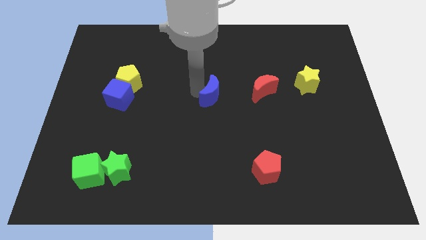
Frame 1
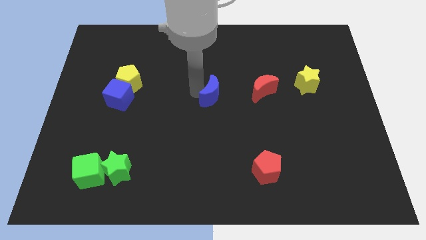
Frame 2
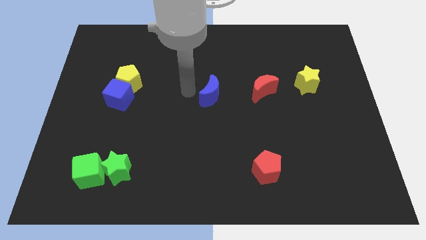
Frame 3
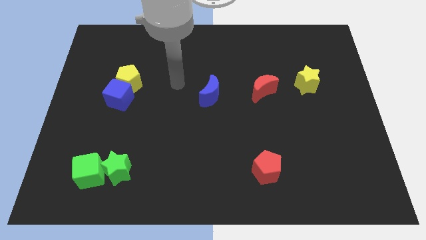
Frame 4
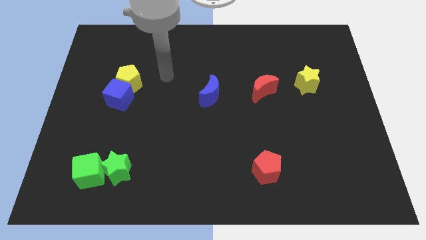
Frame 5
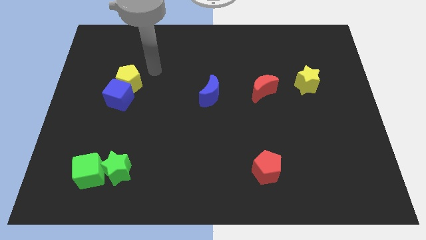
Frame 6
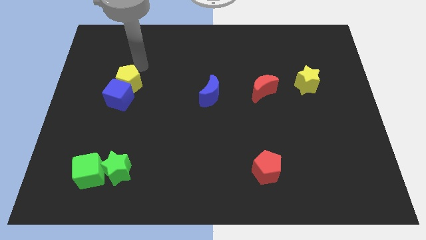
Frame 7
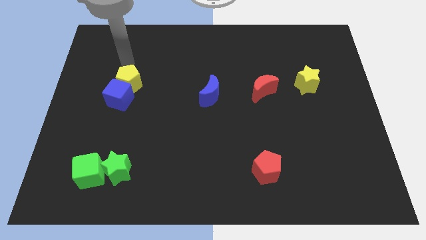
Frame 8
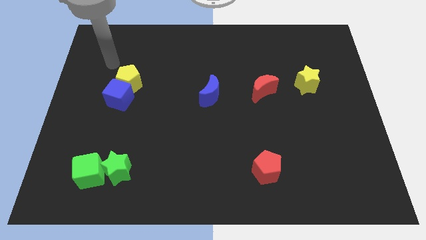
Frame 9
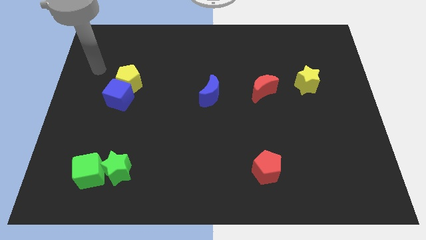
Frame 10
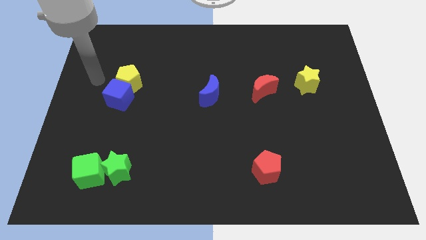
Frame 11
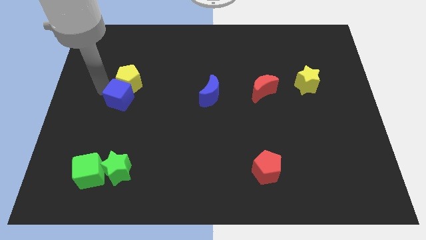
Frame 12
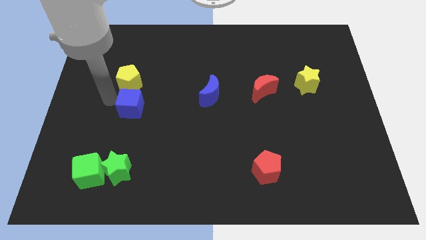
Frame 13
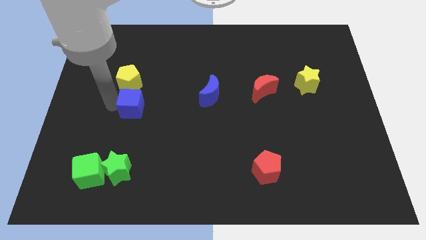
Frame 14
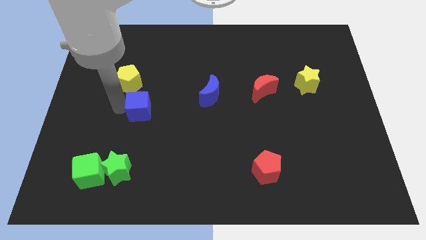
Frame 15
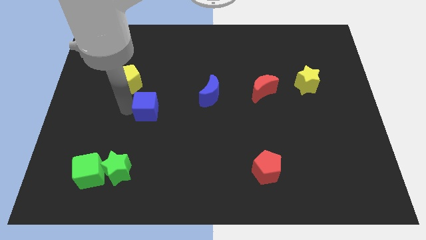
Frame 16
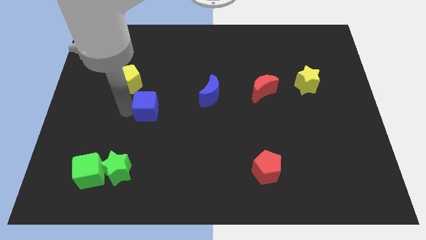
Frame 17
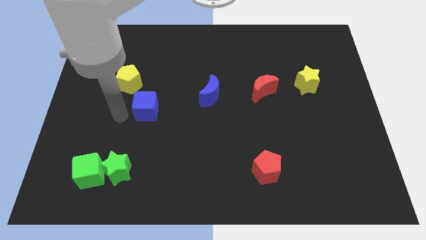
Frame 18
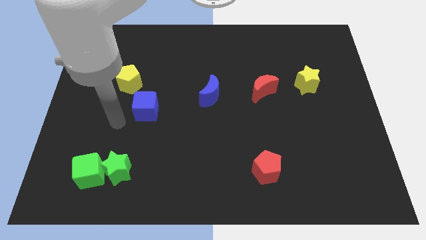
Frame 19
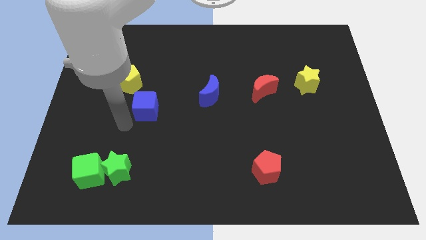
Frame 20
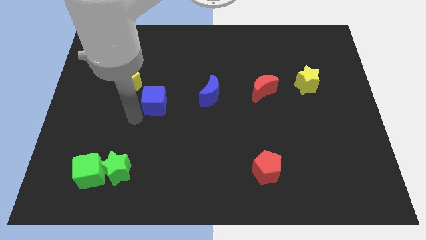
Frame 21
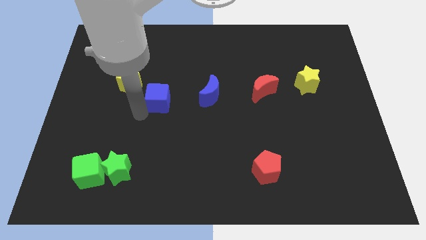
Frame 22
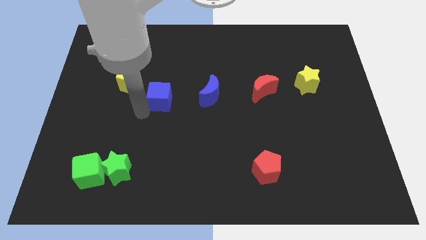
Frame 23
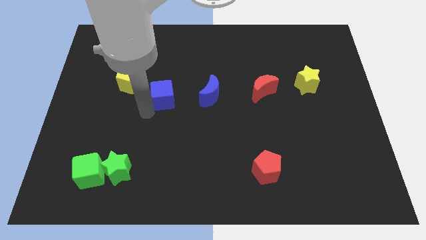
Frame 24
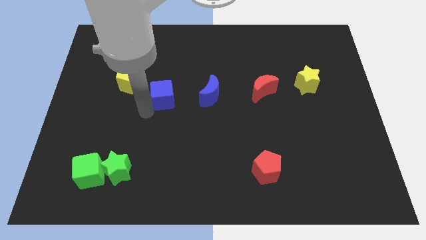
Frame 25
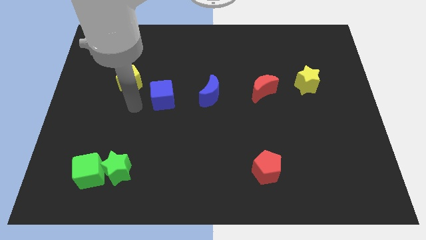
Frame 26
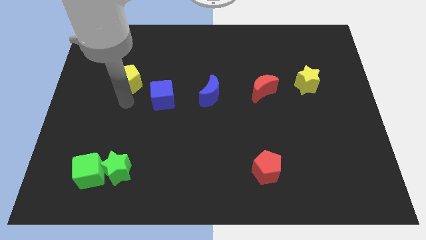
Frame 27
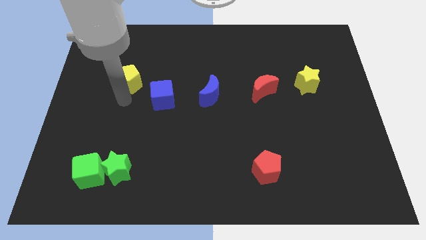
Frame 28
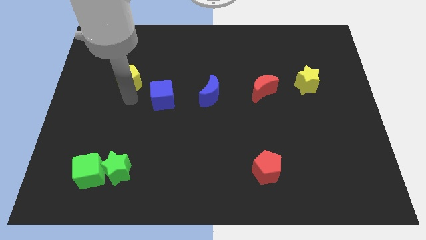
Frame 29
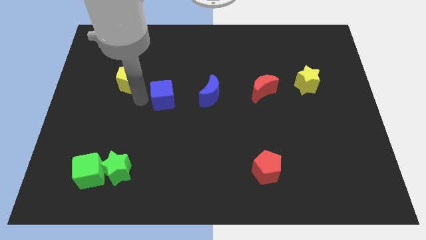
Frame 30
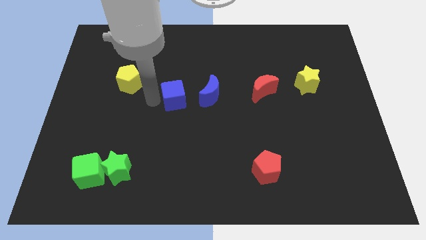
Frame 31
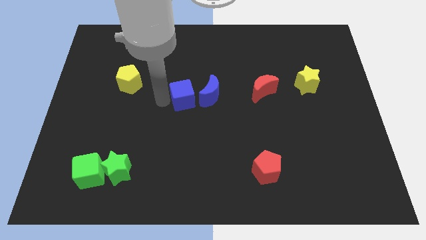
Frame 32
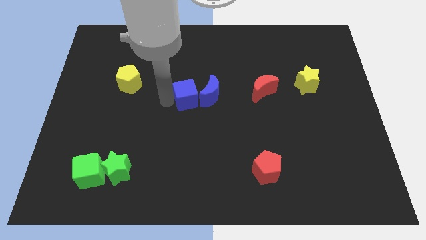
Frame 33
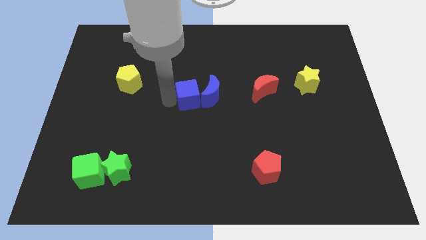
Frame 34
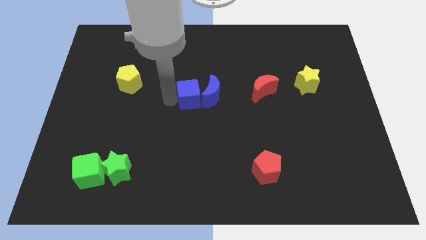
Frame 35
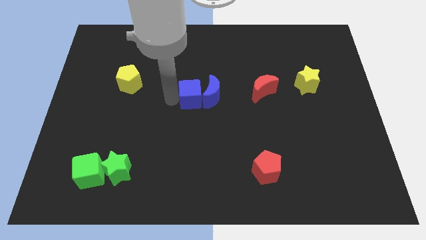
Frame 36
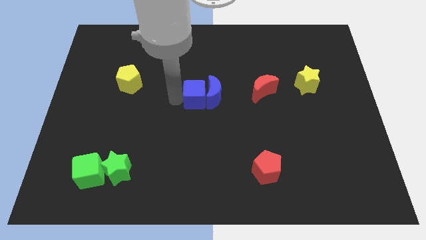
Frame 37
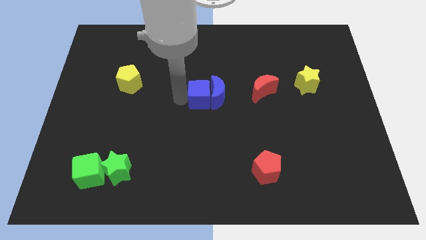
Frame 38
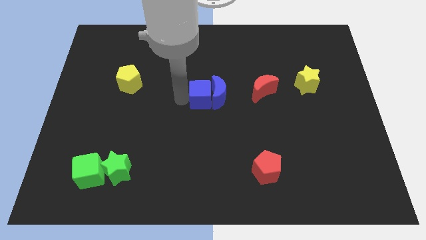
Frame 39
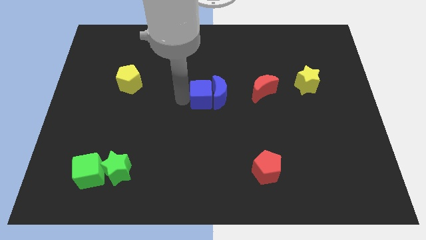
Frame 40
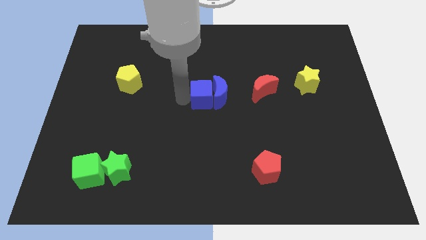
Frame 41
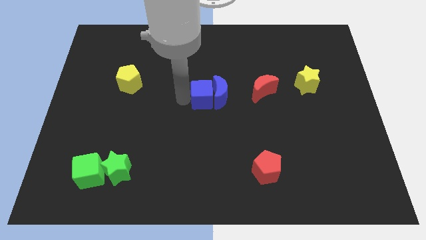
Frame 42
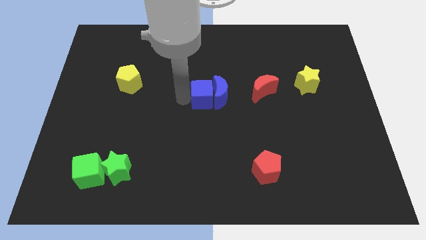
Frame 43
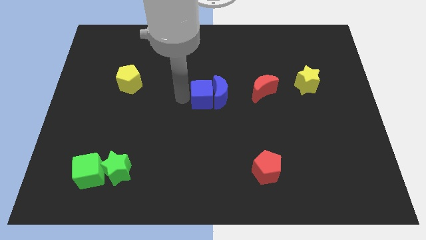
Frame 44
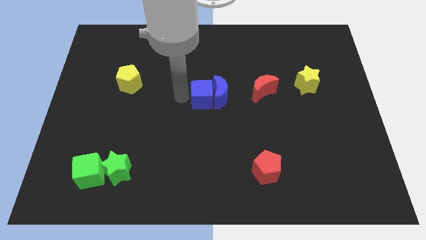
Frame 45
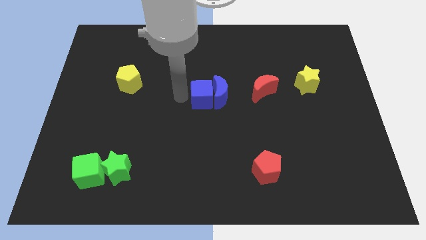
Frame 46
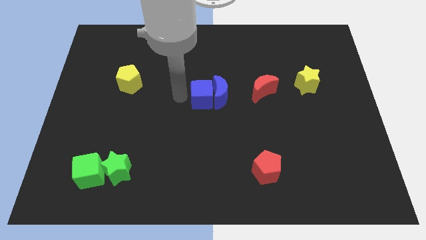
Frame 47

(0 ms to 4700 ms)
put the blue cube into the blue moon

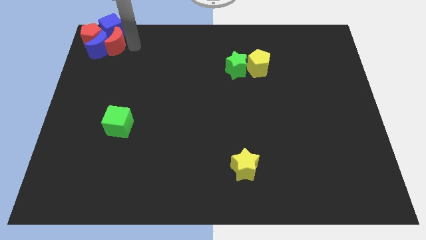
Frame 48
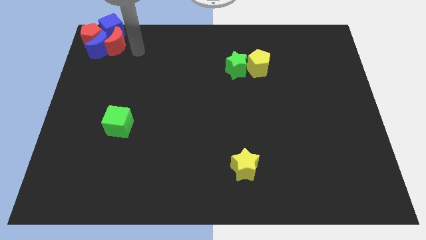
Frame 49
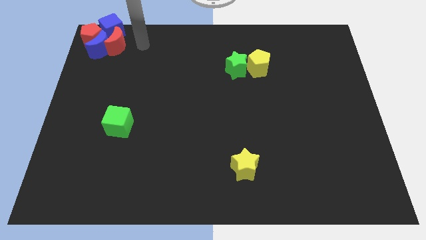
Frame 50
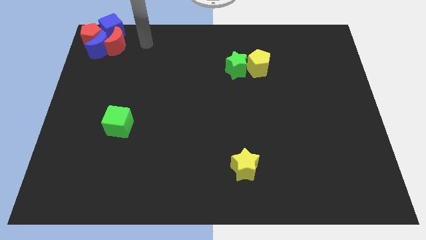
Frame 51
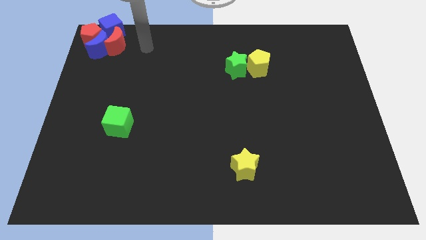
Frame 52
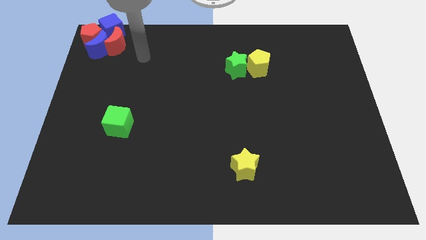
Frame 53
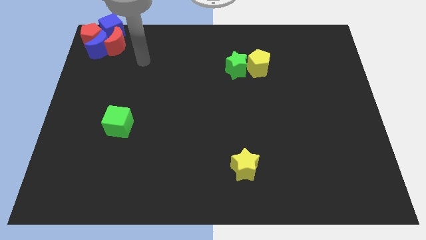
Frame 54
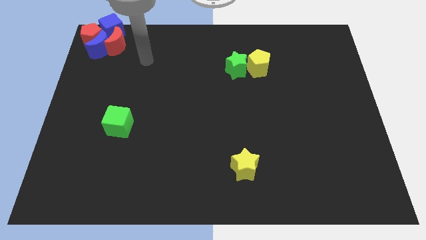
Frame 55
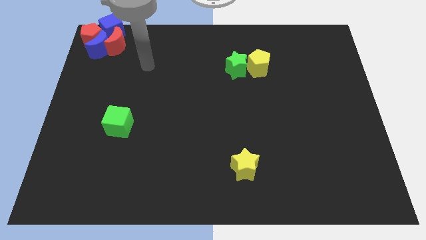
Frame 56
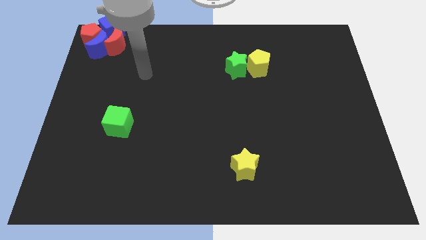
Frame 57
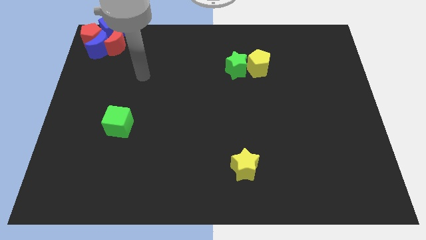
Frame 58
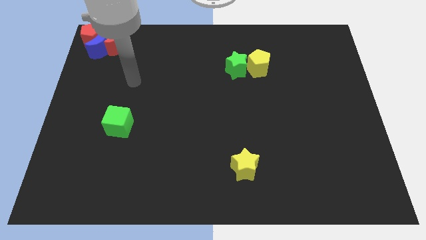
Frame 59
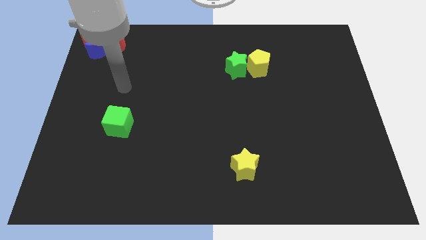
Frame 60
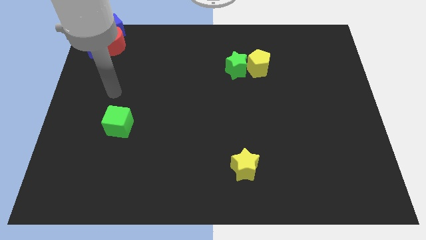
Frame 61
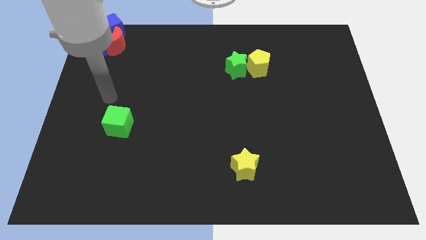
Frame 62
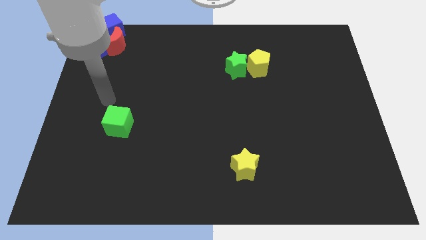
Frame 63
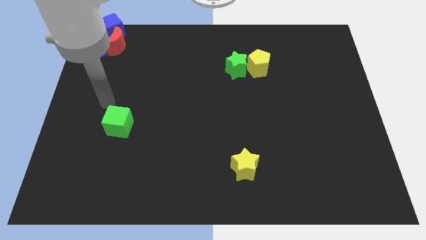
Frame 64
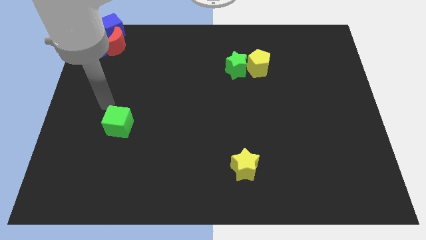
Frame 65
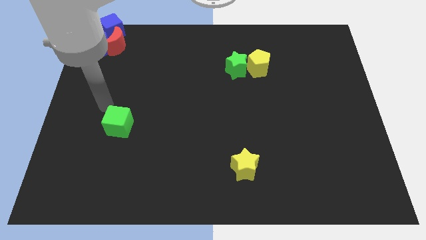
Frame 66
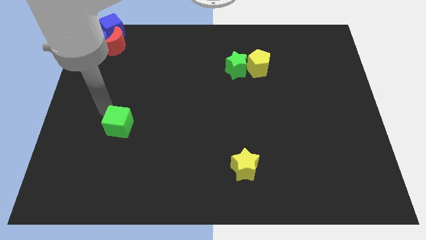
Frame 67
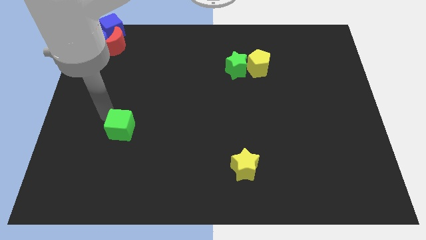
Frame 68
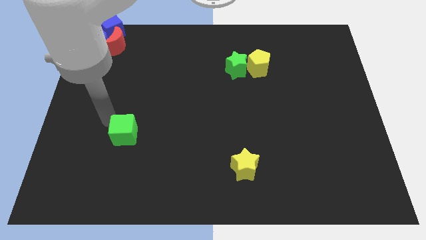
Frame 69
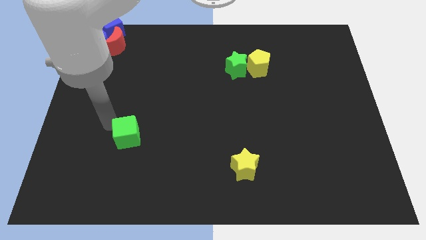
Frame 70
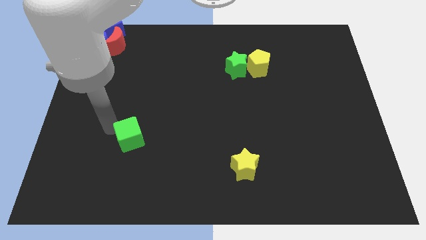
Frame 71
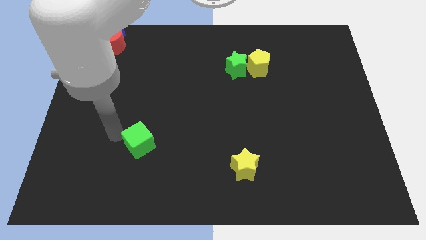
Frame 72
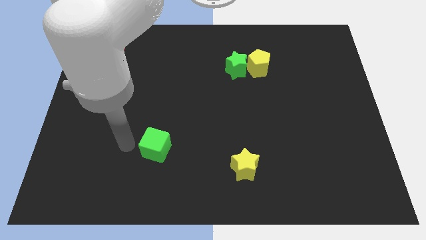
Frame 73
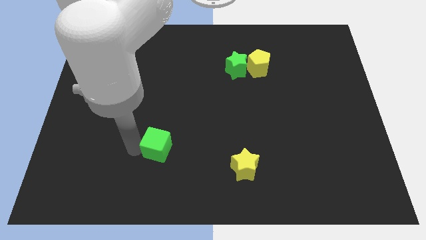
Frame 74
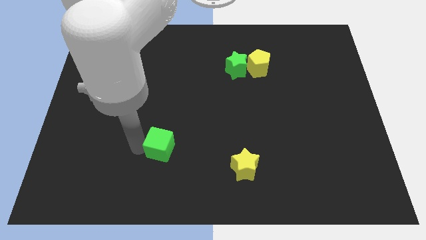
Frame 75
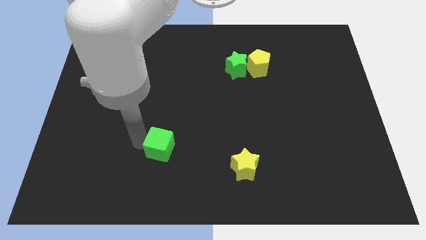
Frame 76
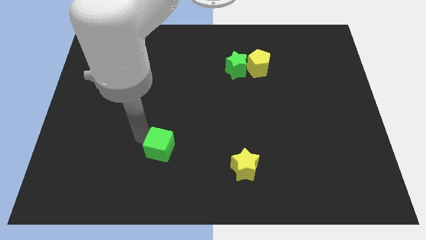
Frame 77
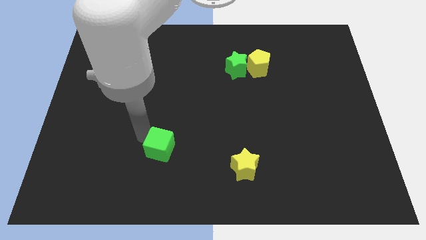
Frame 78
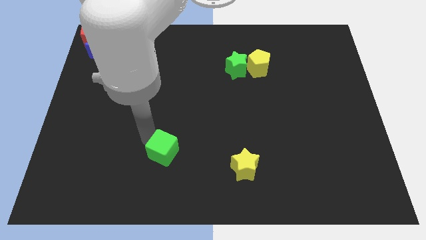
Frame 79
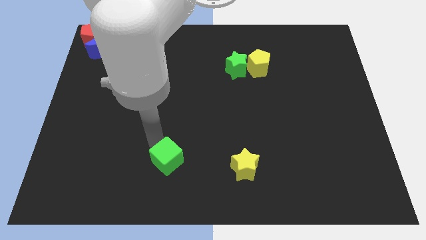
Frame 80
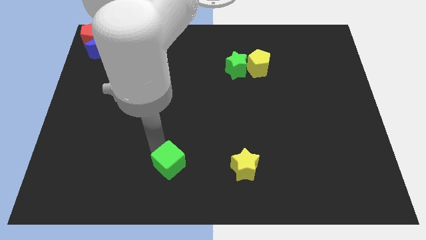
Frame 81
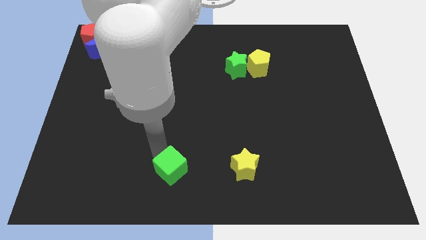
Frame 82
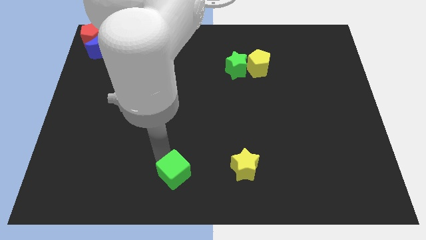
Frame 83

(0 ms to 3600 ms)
move the green cube to the left of the yellow star

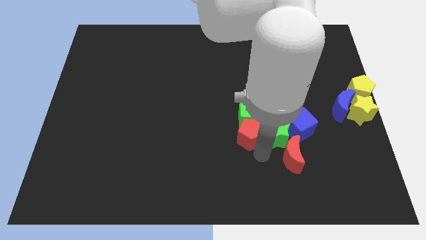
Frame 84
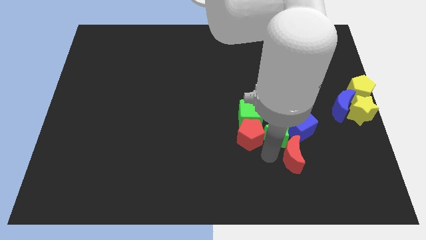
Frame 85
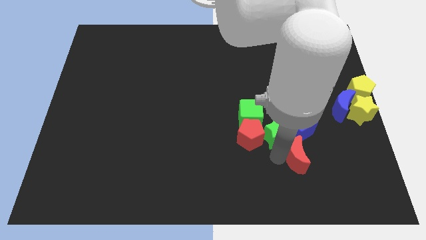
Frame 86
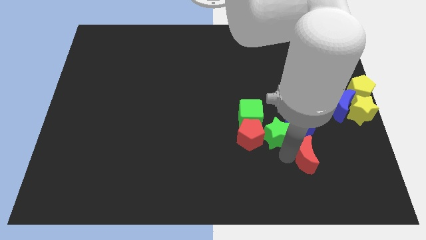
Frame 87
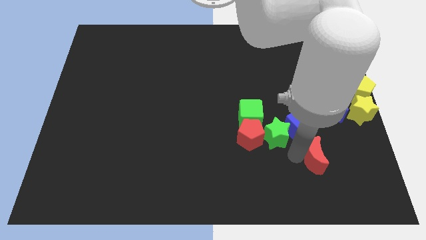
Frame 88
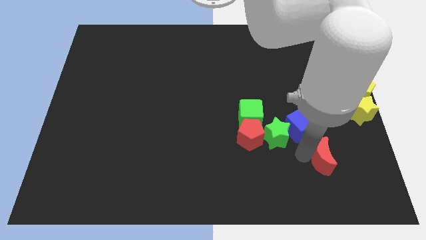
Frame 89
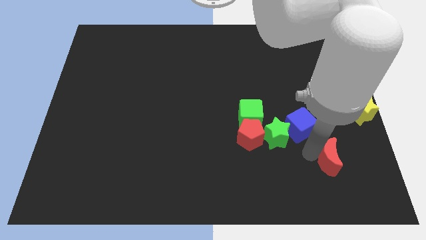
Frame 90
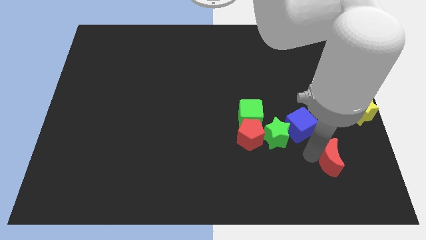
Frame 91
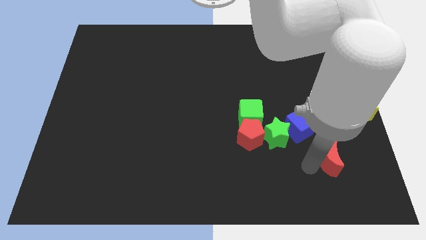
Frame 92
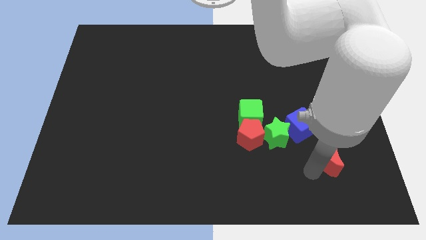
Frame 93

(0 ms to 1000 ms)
move the red moon diagonal to the blue cube
